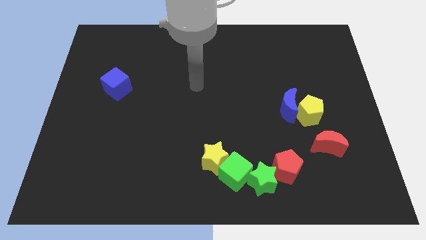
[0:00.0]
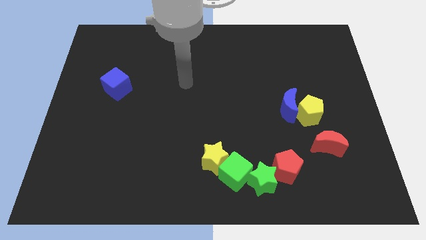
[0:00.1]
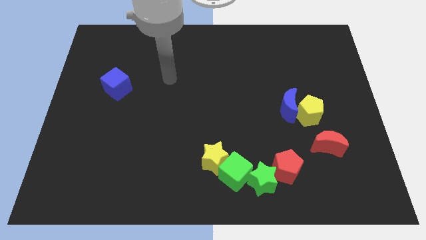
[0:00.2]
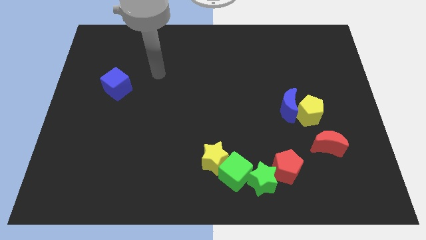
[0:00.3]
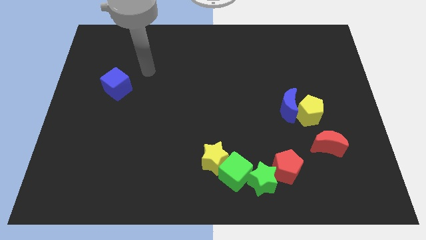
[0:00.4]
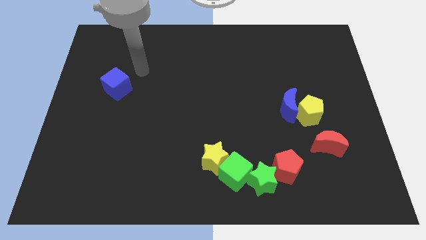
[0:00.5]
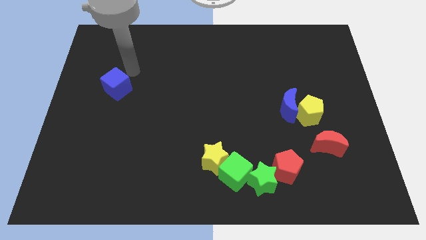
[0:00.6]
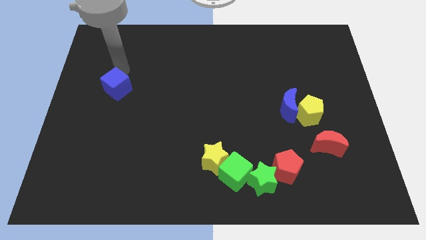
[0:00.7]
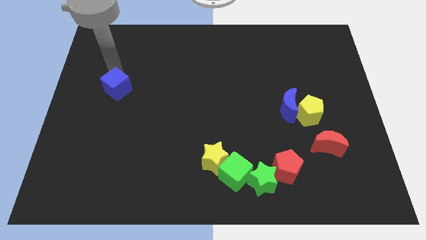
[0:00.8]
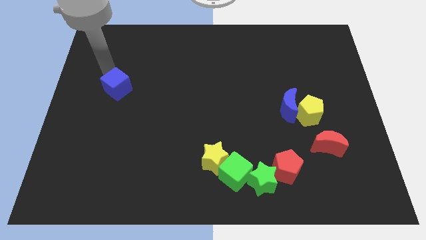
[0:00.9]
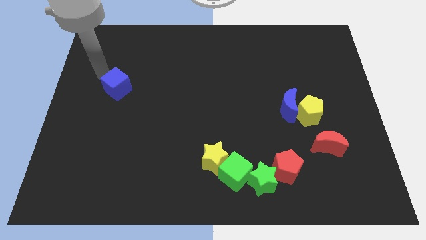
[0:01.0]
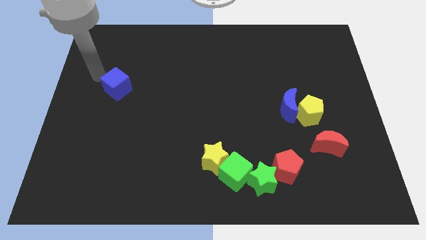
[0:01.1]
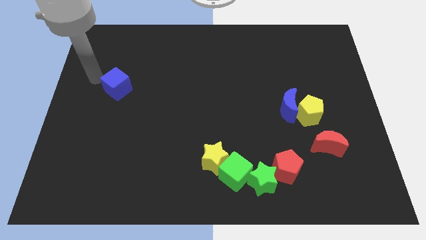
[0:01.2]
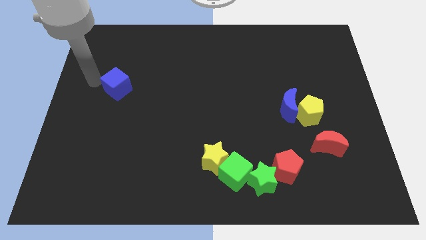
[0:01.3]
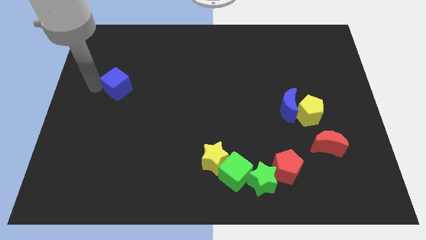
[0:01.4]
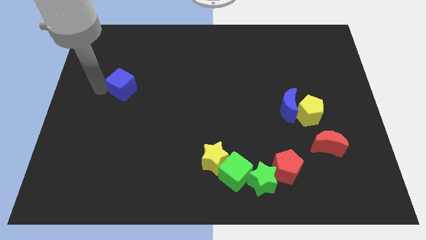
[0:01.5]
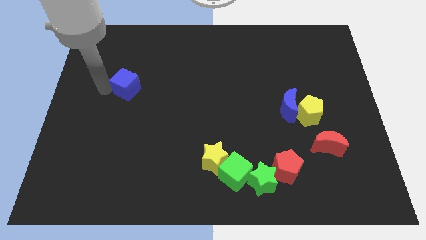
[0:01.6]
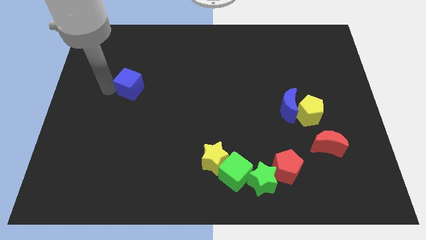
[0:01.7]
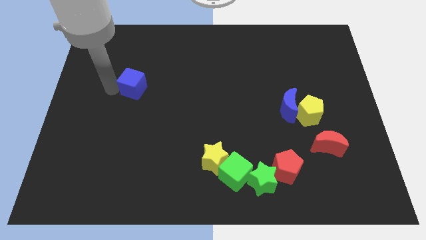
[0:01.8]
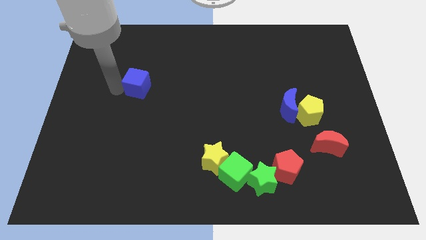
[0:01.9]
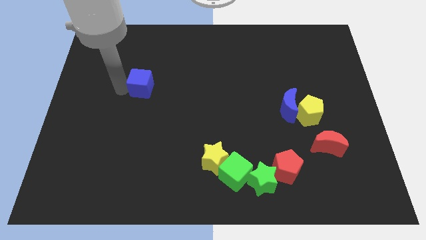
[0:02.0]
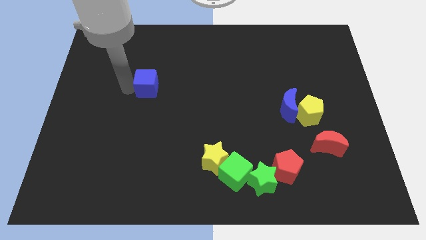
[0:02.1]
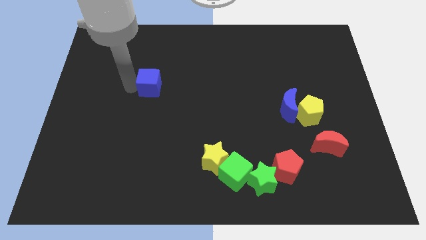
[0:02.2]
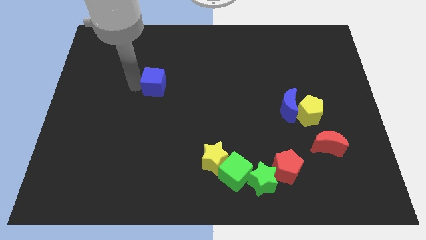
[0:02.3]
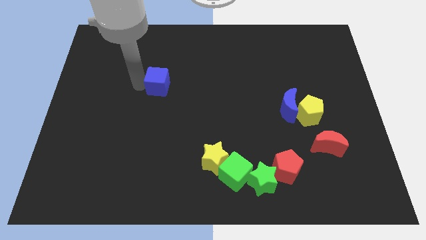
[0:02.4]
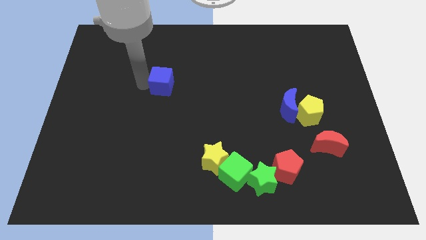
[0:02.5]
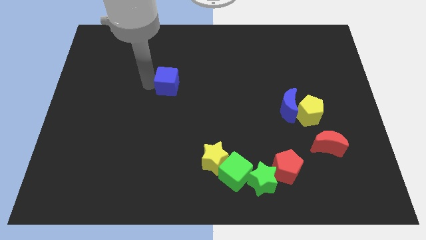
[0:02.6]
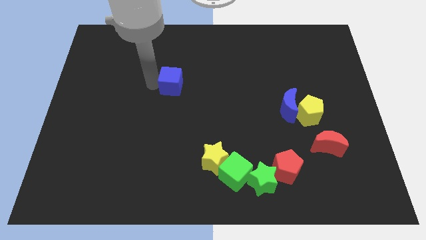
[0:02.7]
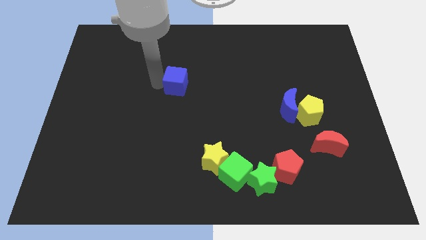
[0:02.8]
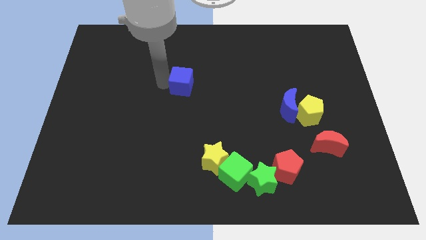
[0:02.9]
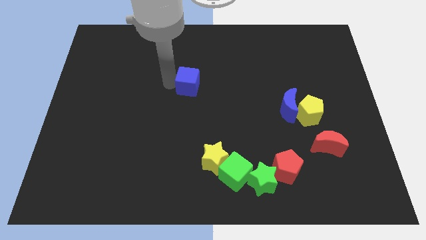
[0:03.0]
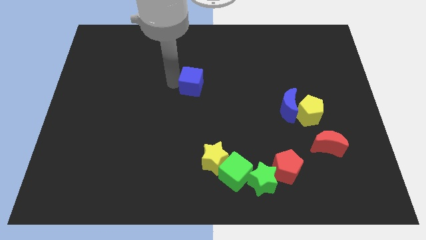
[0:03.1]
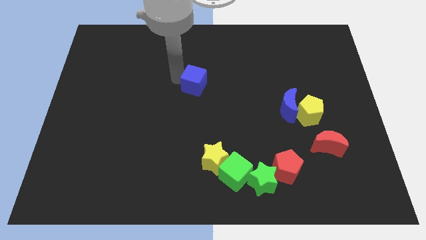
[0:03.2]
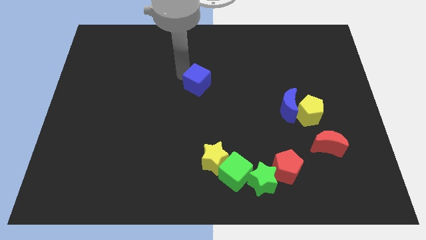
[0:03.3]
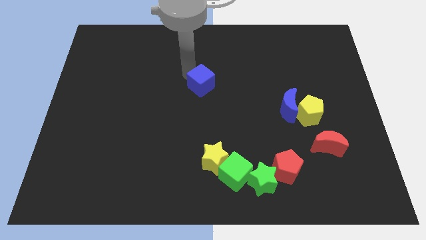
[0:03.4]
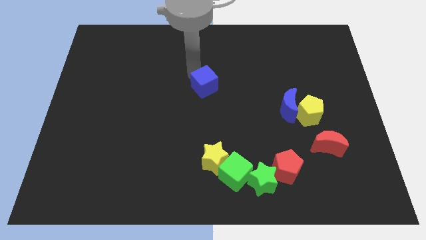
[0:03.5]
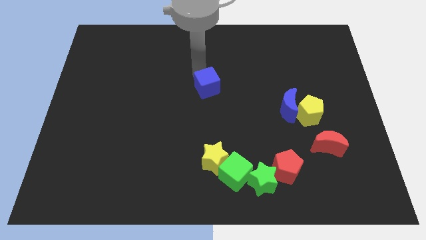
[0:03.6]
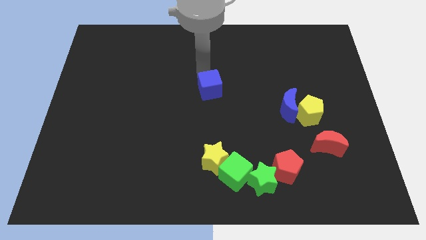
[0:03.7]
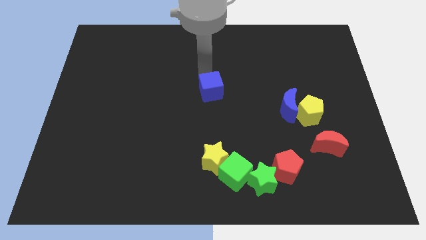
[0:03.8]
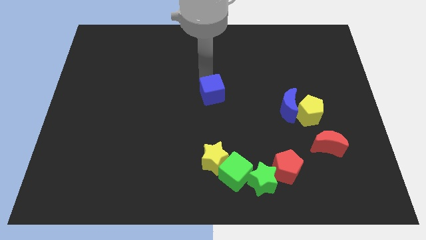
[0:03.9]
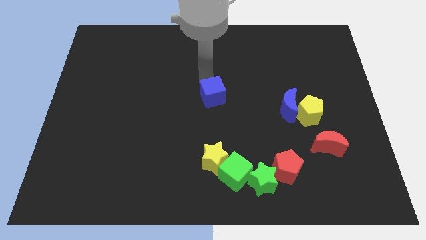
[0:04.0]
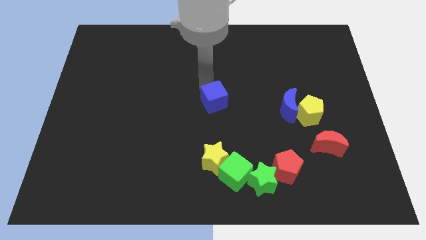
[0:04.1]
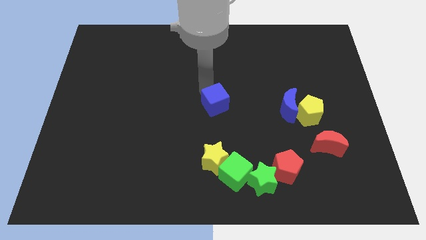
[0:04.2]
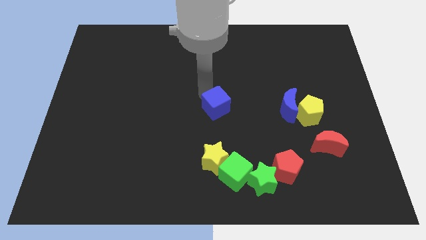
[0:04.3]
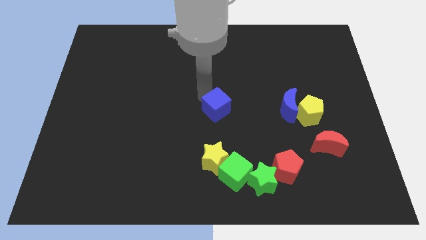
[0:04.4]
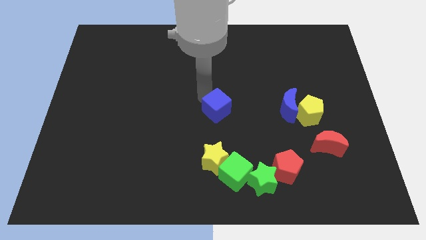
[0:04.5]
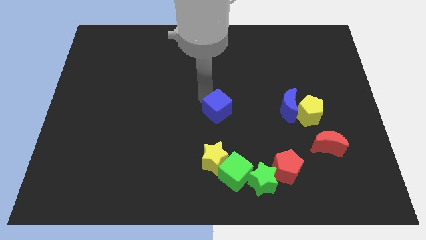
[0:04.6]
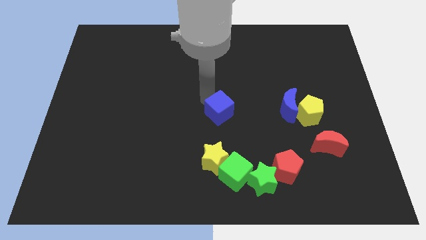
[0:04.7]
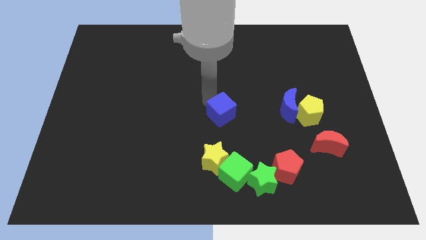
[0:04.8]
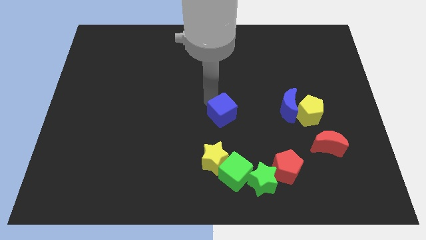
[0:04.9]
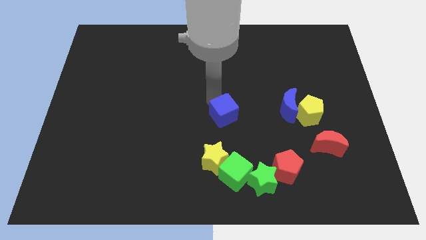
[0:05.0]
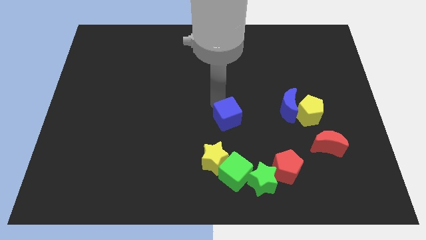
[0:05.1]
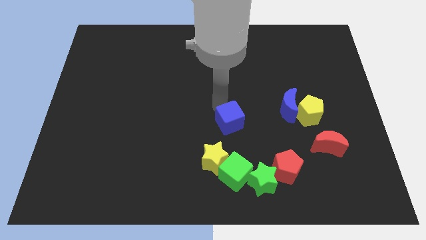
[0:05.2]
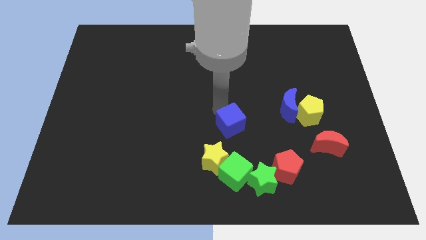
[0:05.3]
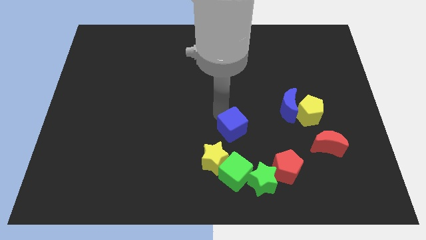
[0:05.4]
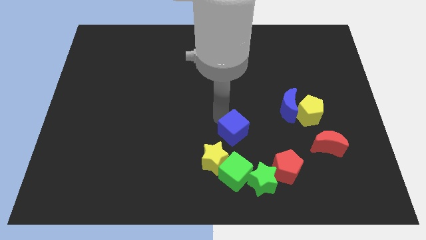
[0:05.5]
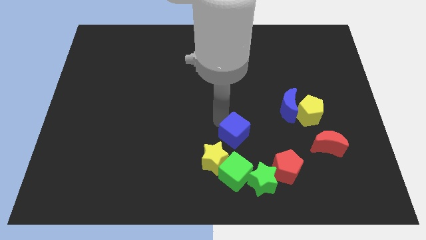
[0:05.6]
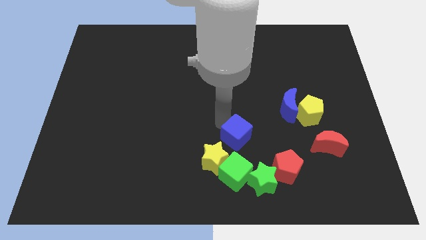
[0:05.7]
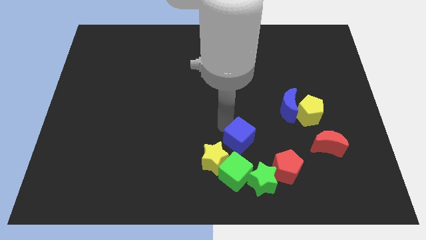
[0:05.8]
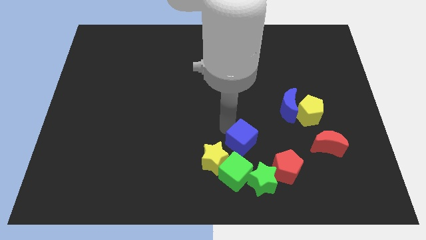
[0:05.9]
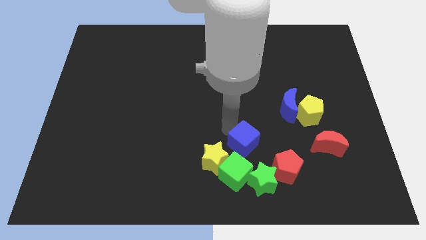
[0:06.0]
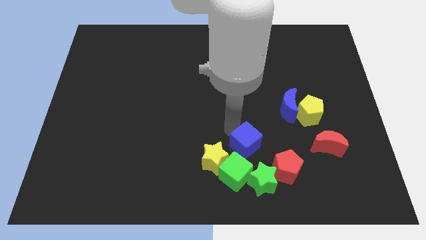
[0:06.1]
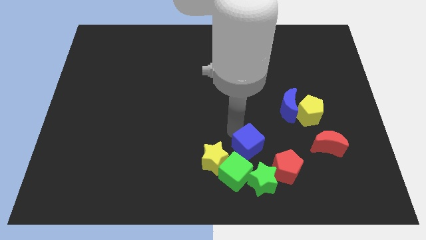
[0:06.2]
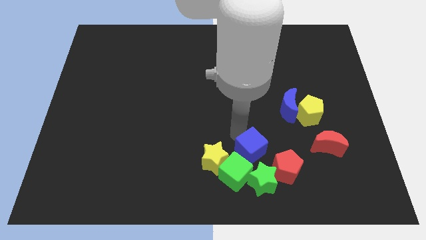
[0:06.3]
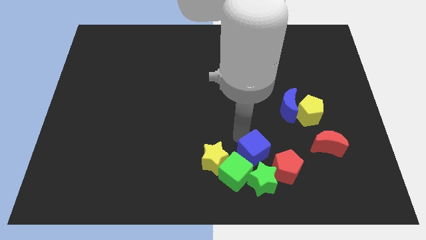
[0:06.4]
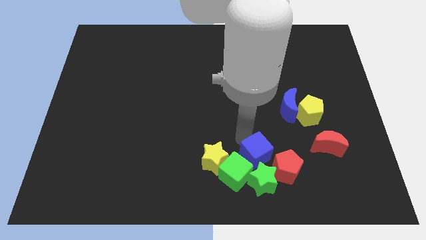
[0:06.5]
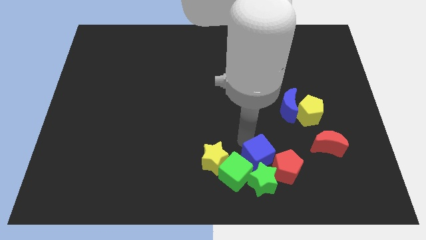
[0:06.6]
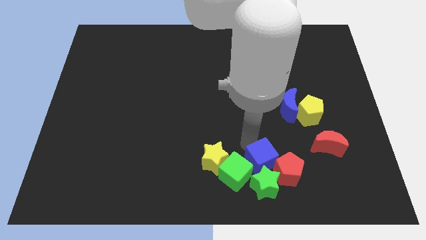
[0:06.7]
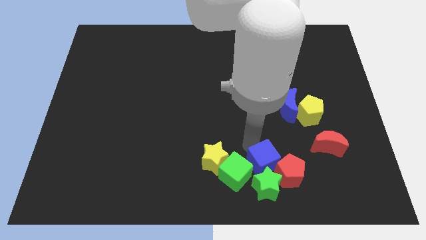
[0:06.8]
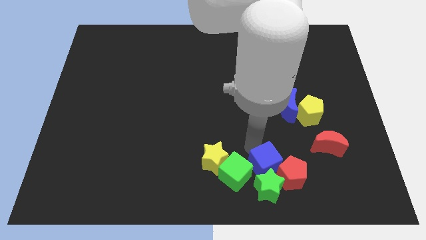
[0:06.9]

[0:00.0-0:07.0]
push the blue cube to the red pentagon

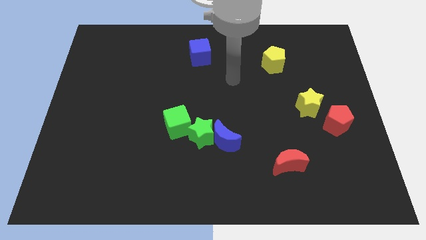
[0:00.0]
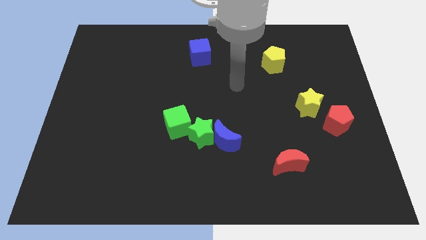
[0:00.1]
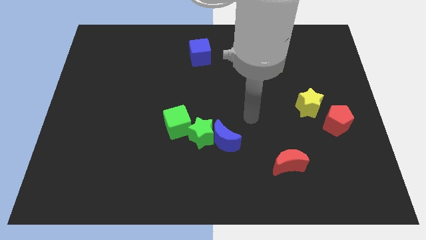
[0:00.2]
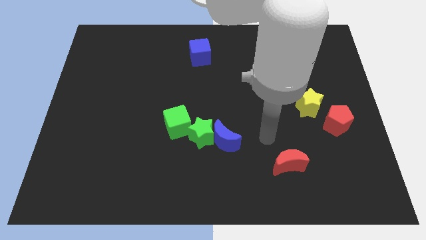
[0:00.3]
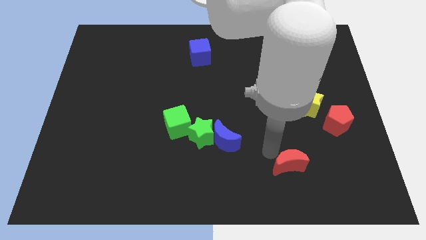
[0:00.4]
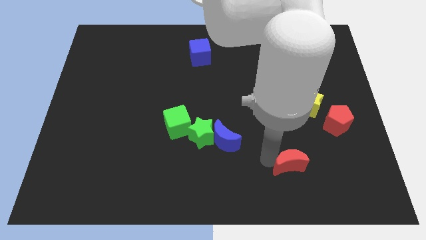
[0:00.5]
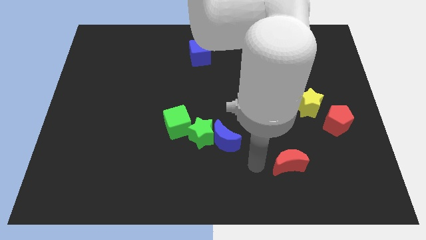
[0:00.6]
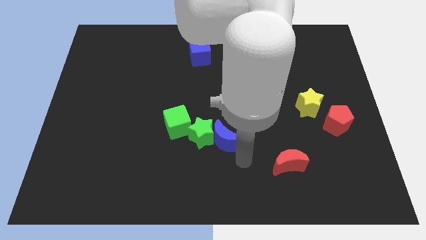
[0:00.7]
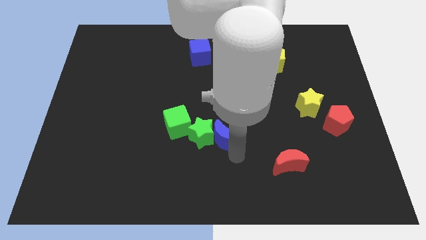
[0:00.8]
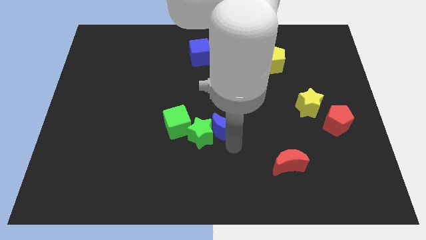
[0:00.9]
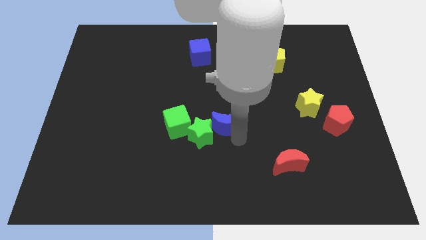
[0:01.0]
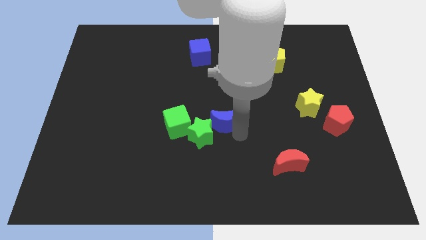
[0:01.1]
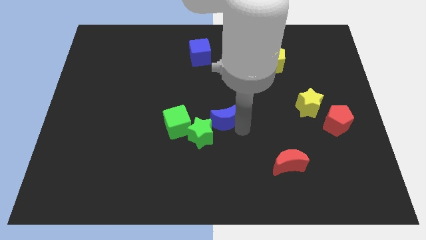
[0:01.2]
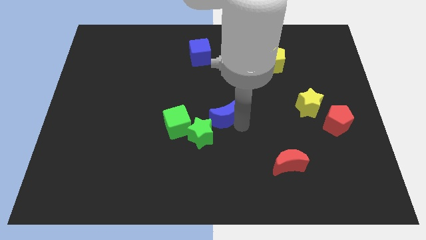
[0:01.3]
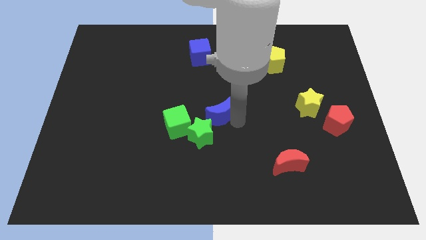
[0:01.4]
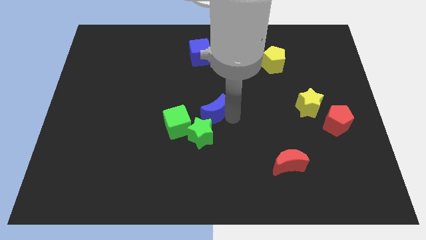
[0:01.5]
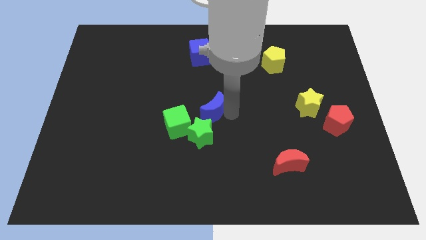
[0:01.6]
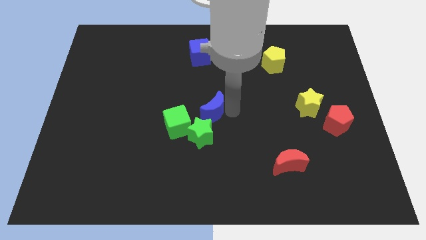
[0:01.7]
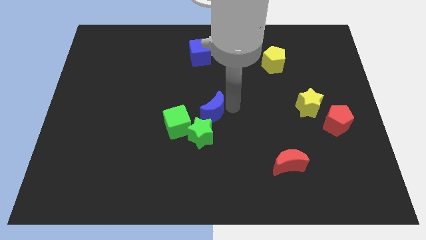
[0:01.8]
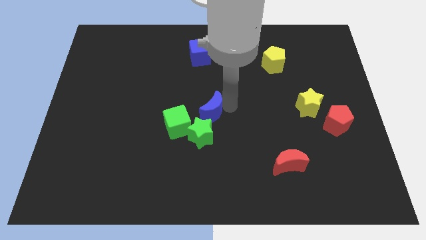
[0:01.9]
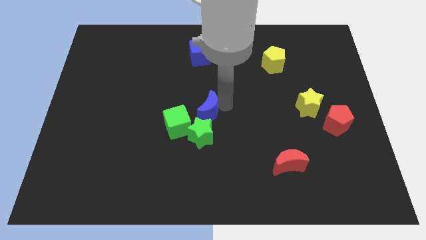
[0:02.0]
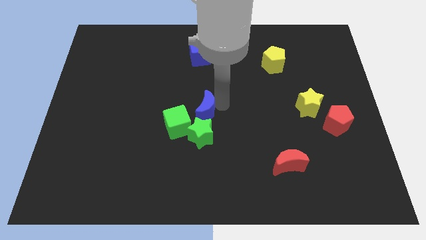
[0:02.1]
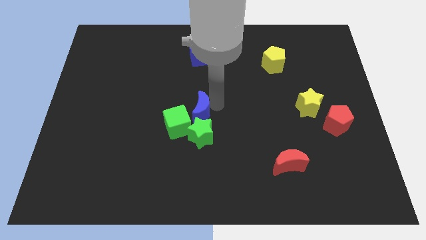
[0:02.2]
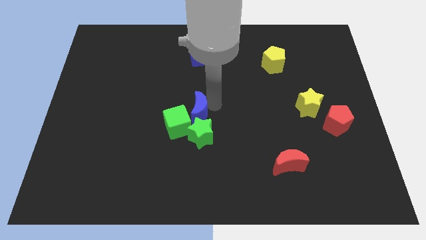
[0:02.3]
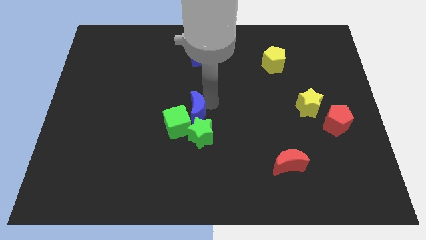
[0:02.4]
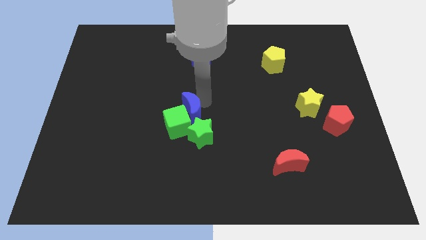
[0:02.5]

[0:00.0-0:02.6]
slide the blue moon to the green cube
